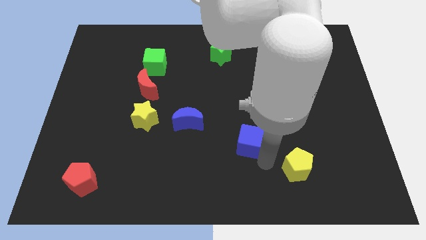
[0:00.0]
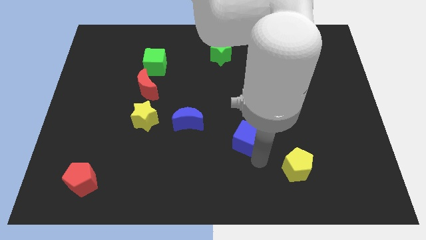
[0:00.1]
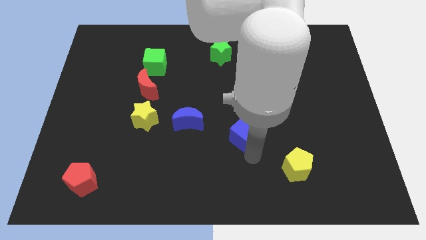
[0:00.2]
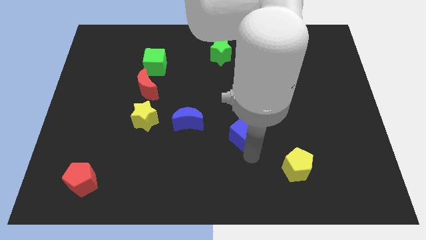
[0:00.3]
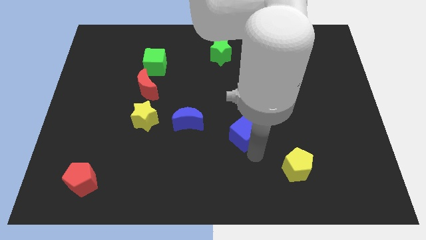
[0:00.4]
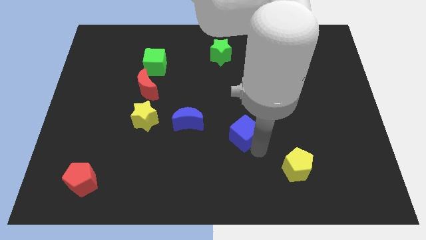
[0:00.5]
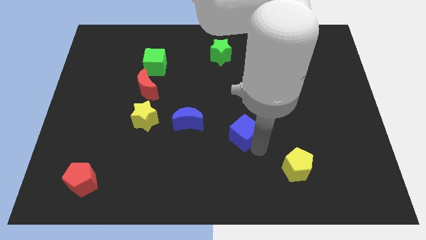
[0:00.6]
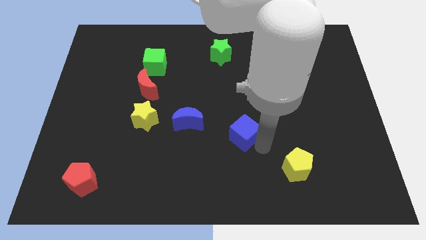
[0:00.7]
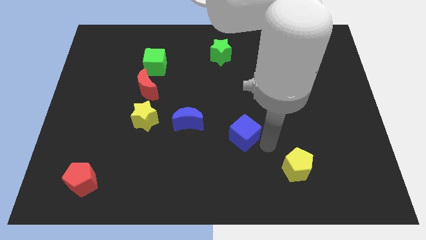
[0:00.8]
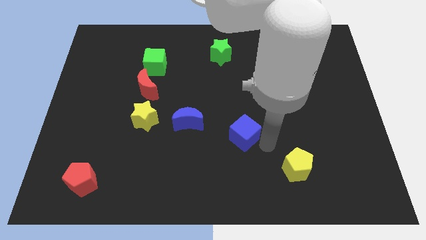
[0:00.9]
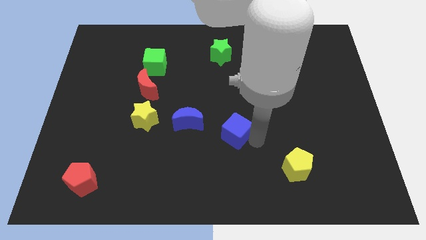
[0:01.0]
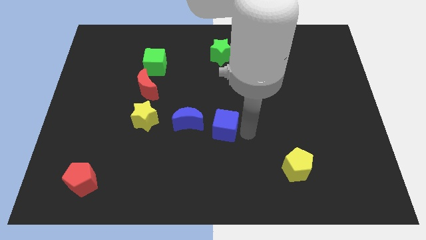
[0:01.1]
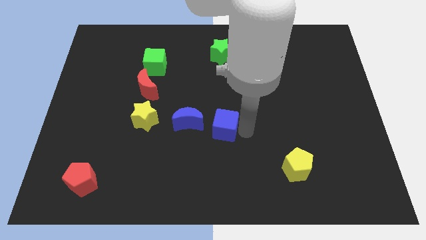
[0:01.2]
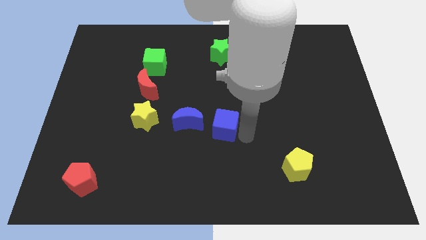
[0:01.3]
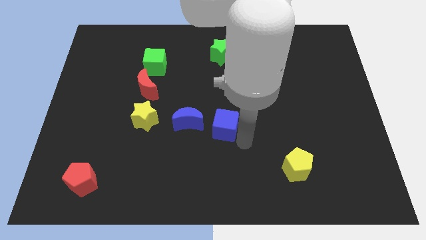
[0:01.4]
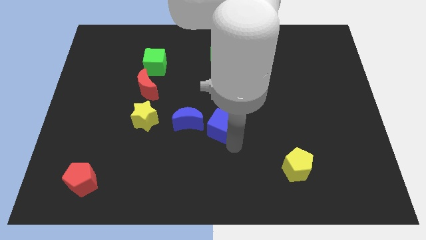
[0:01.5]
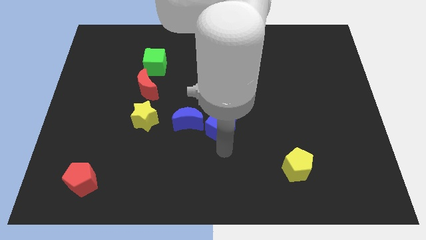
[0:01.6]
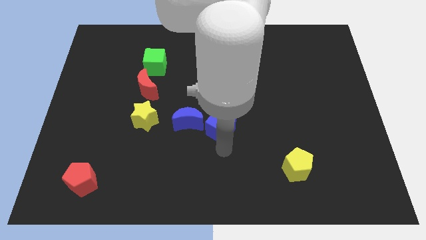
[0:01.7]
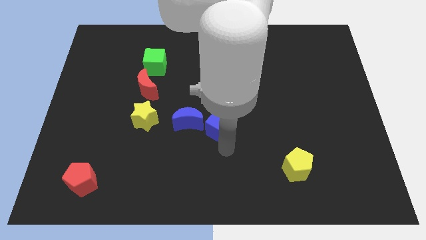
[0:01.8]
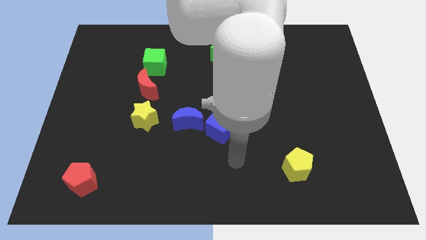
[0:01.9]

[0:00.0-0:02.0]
place the blue cube right to the blue moon

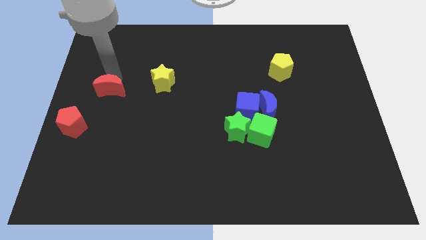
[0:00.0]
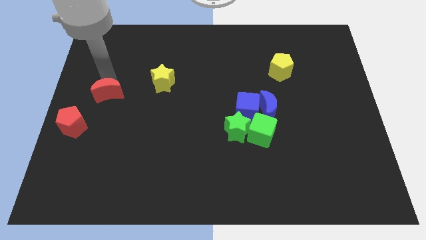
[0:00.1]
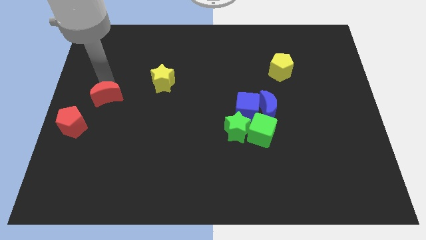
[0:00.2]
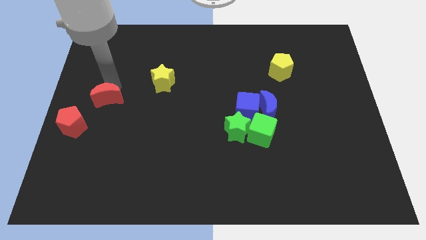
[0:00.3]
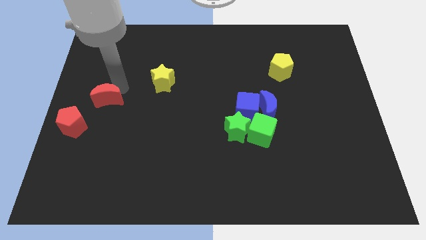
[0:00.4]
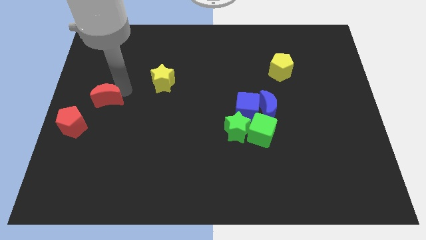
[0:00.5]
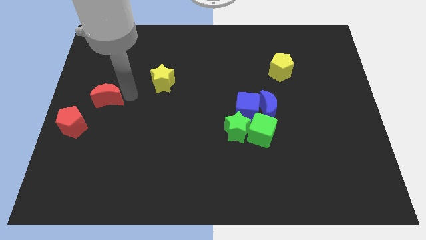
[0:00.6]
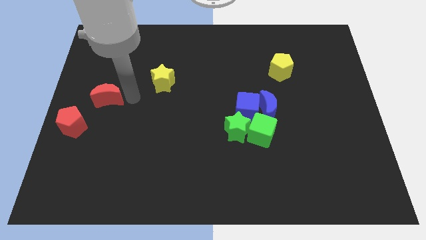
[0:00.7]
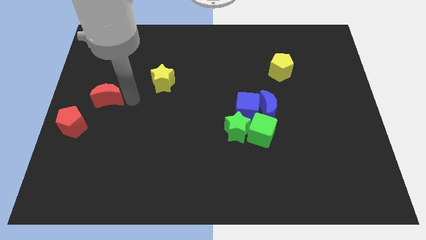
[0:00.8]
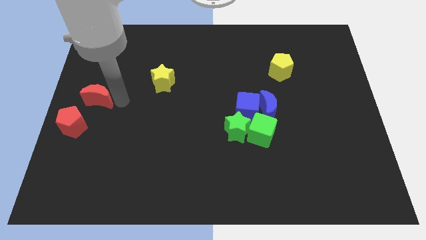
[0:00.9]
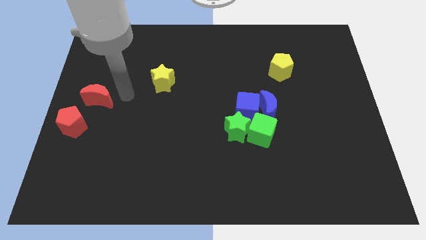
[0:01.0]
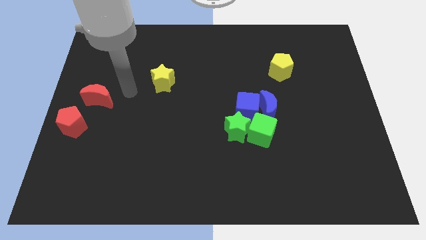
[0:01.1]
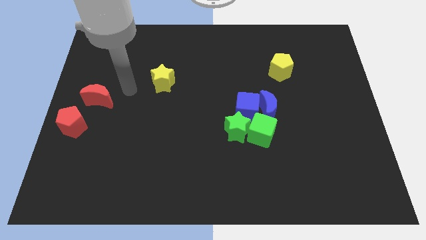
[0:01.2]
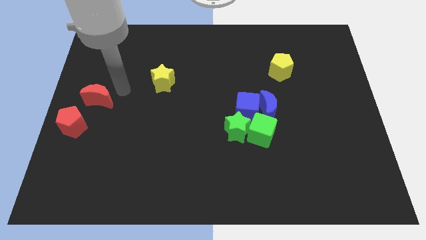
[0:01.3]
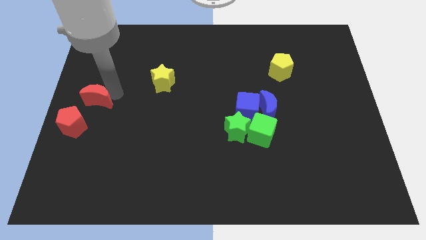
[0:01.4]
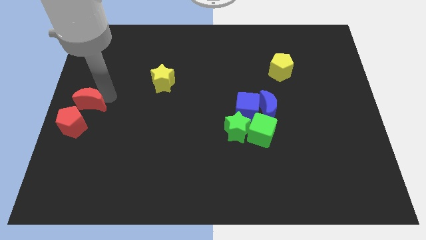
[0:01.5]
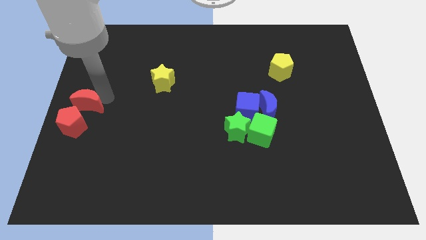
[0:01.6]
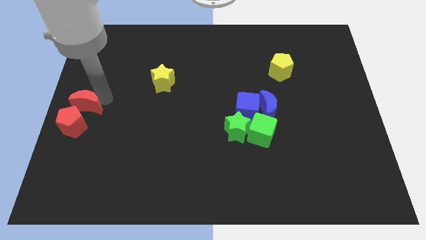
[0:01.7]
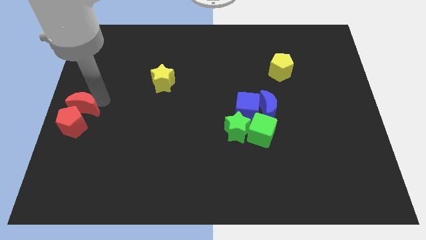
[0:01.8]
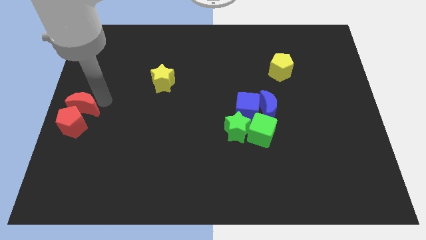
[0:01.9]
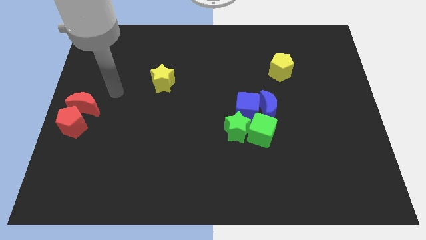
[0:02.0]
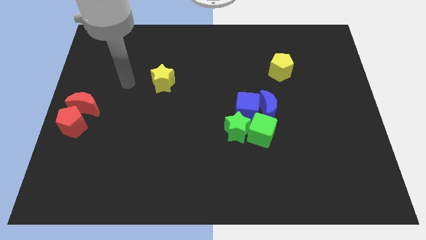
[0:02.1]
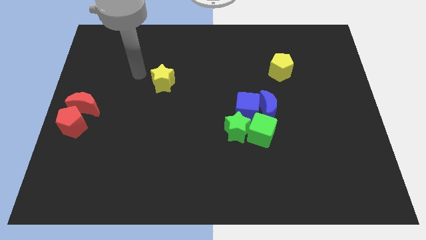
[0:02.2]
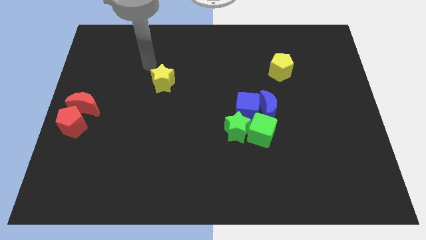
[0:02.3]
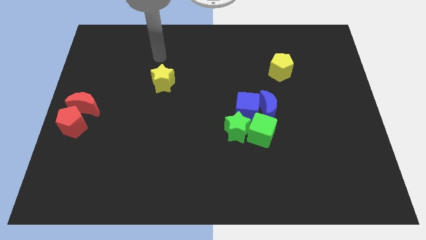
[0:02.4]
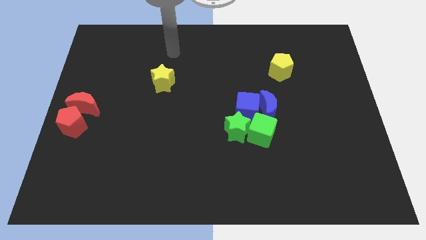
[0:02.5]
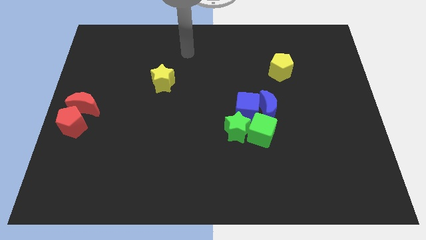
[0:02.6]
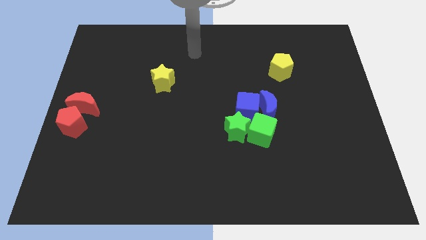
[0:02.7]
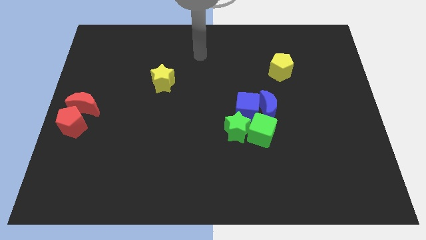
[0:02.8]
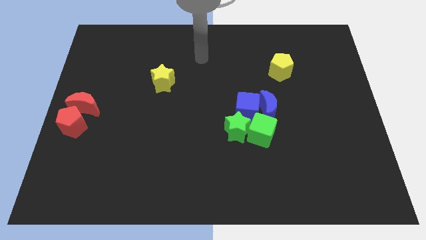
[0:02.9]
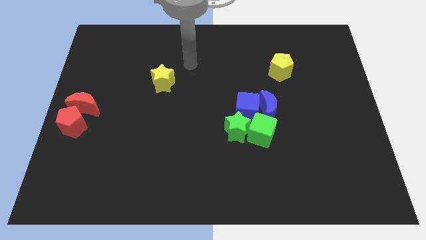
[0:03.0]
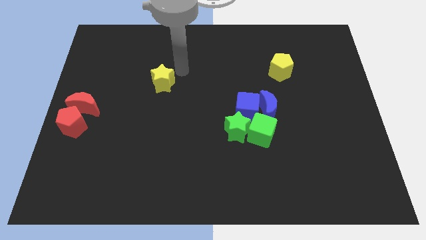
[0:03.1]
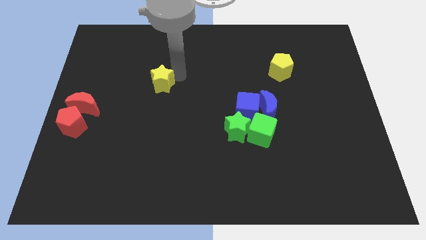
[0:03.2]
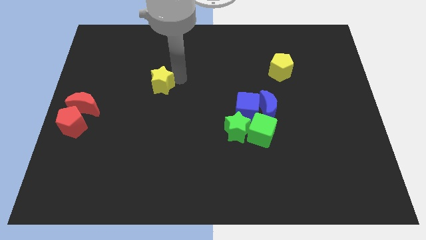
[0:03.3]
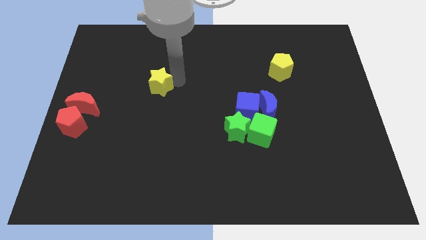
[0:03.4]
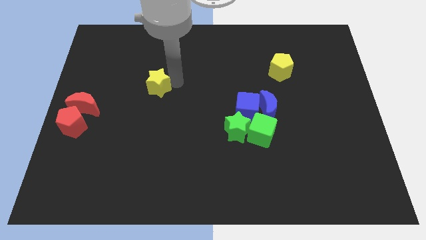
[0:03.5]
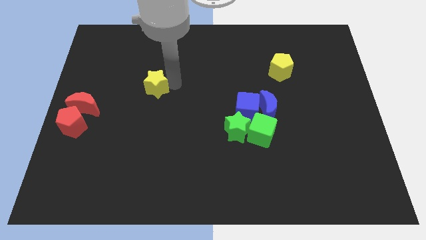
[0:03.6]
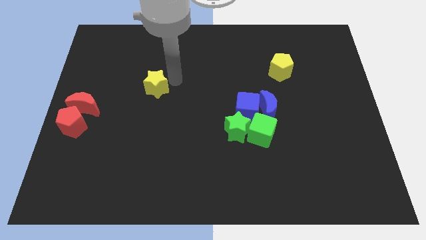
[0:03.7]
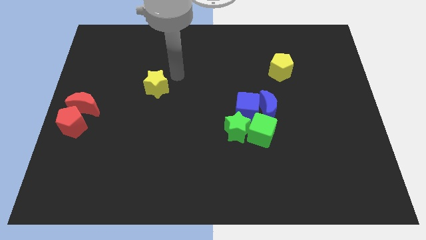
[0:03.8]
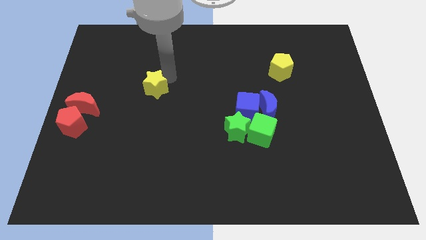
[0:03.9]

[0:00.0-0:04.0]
move red moon into red pentagon

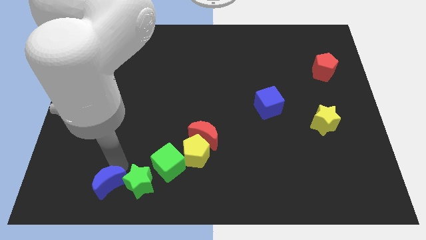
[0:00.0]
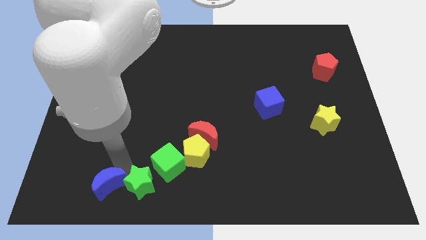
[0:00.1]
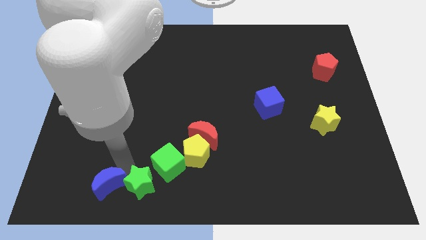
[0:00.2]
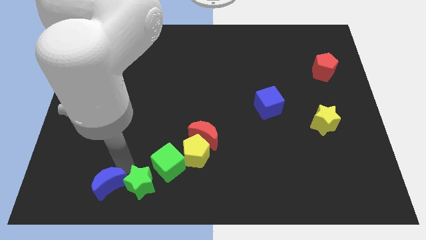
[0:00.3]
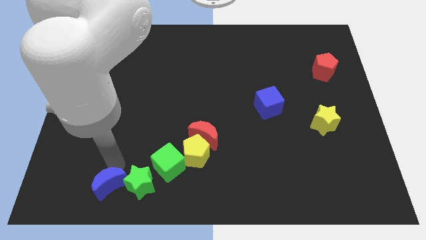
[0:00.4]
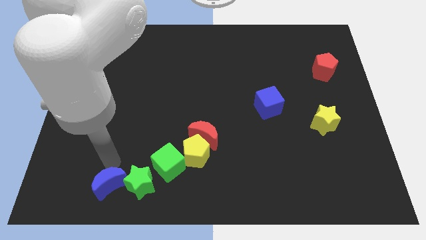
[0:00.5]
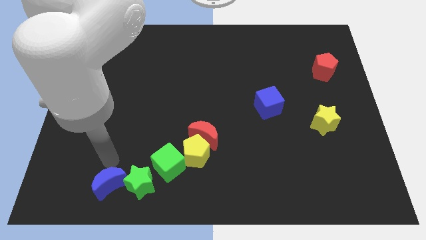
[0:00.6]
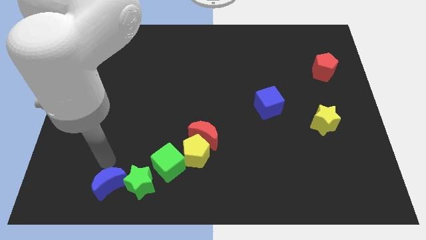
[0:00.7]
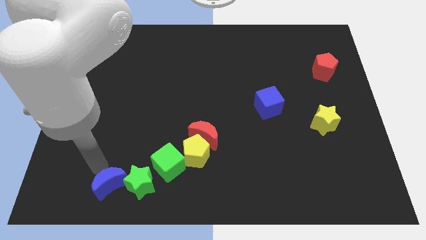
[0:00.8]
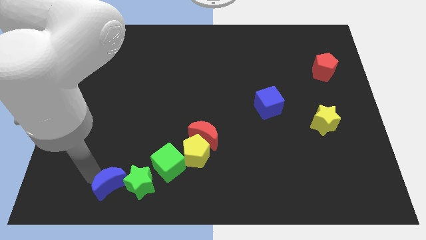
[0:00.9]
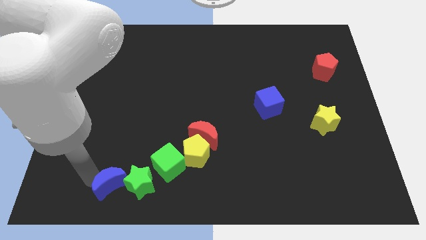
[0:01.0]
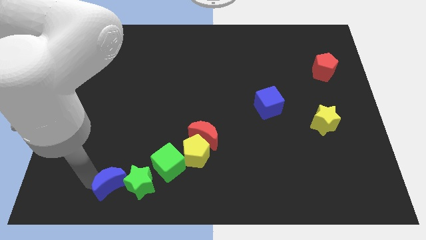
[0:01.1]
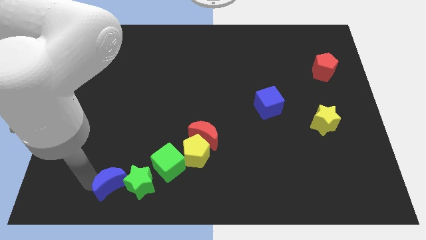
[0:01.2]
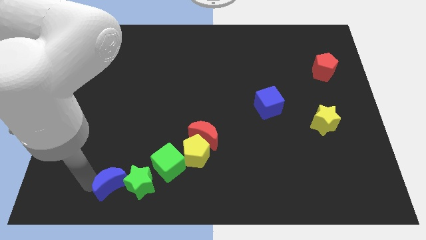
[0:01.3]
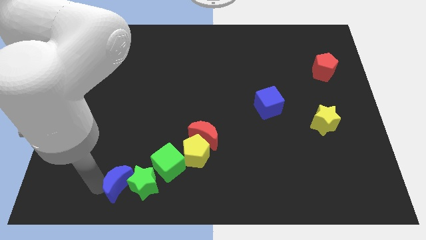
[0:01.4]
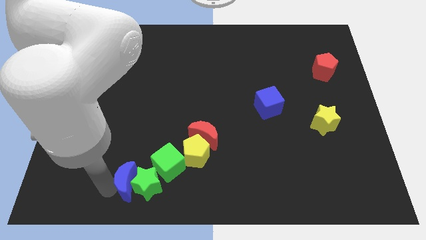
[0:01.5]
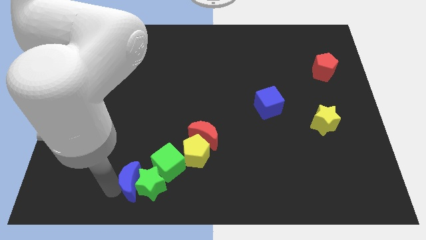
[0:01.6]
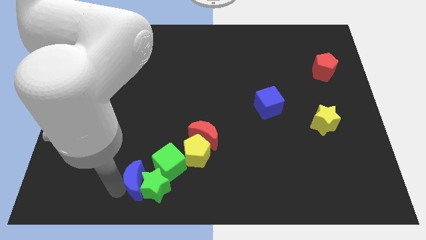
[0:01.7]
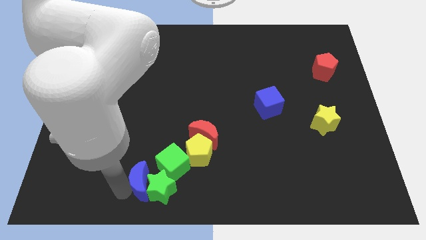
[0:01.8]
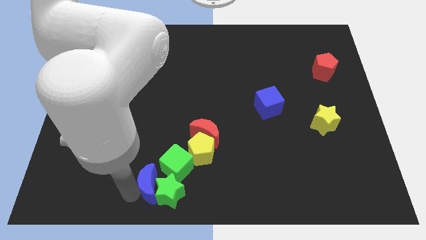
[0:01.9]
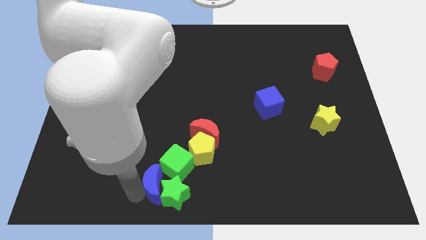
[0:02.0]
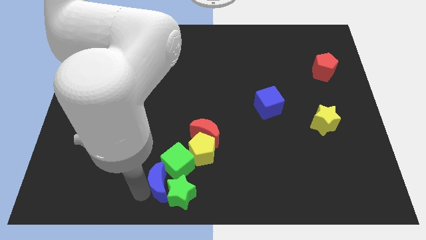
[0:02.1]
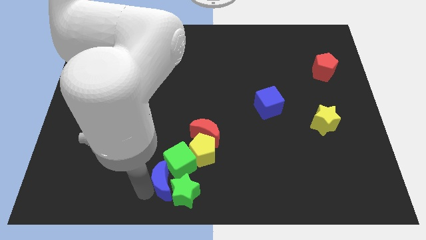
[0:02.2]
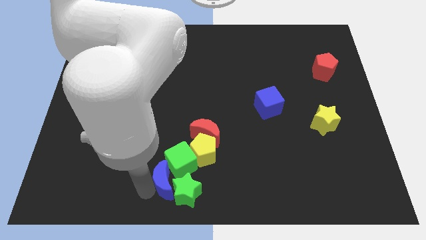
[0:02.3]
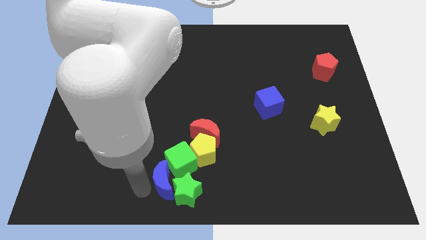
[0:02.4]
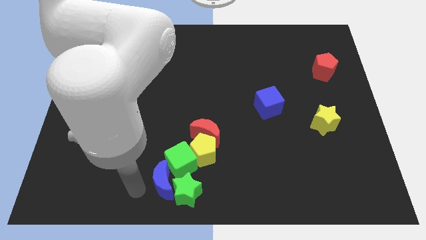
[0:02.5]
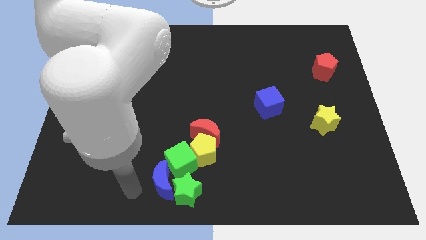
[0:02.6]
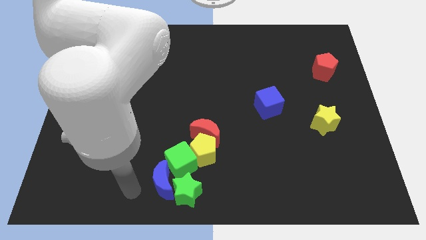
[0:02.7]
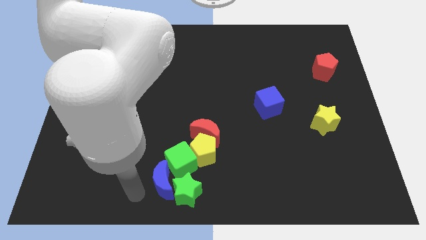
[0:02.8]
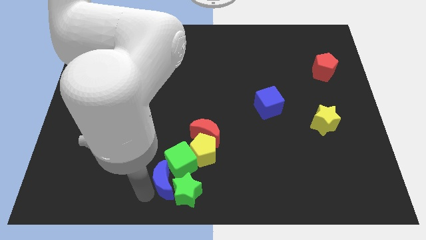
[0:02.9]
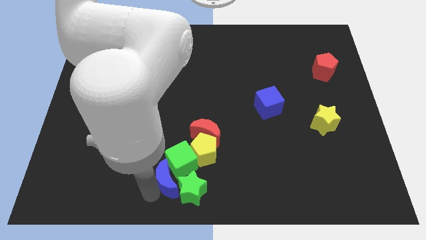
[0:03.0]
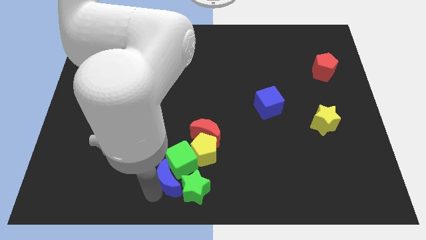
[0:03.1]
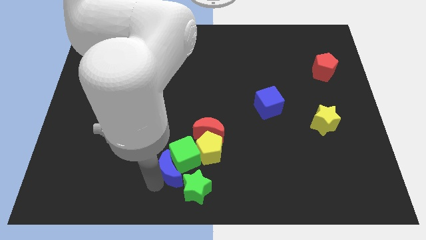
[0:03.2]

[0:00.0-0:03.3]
push the blue moon into green cube and green star
